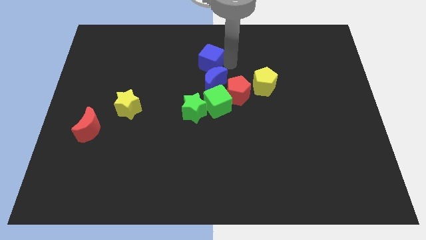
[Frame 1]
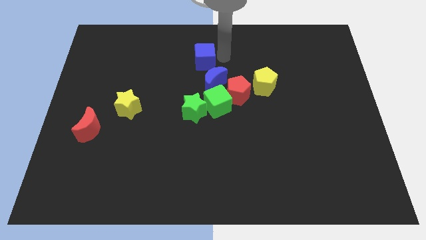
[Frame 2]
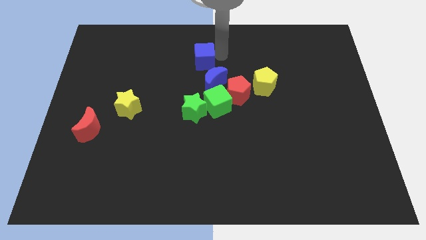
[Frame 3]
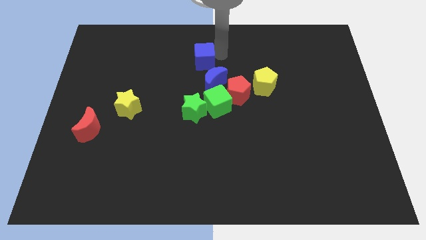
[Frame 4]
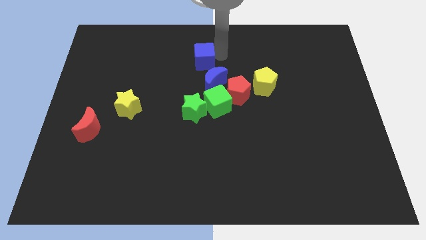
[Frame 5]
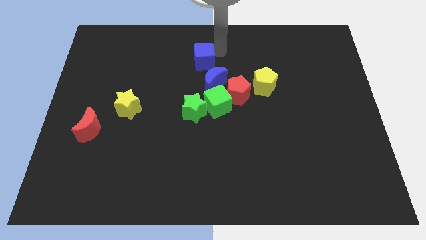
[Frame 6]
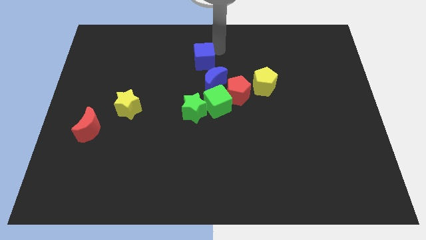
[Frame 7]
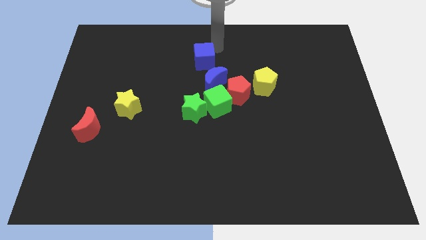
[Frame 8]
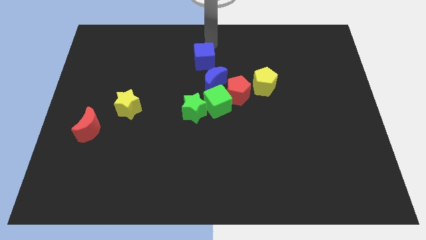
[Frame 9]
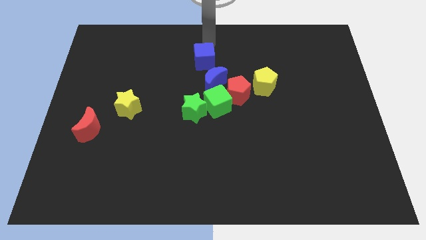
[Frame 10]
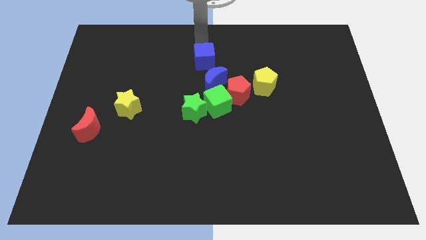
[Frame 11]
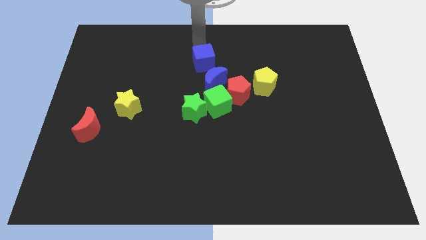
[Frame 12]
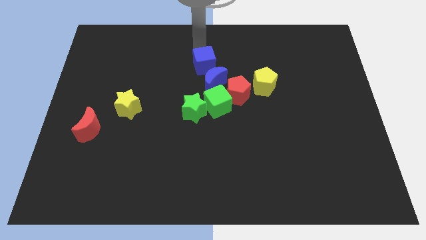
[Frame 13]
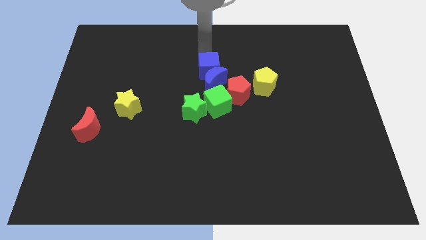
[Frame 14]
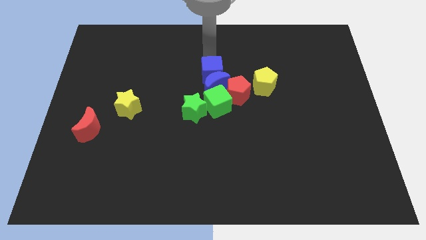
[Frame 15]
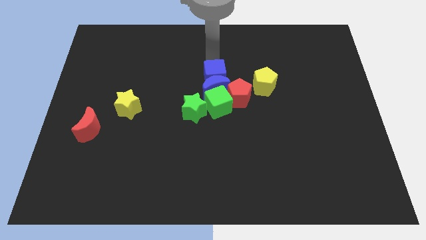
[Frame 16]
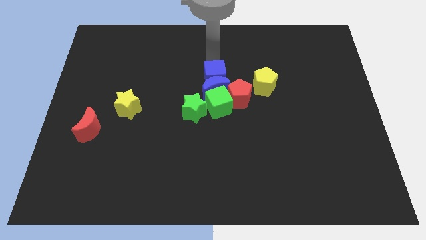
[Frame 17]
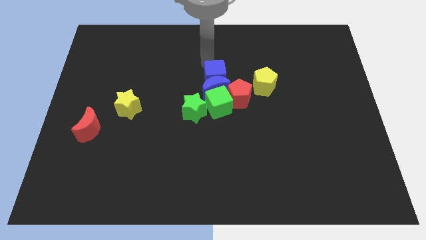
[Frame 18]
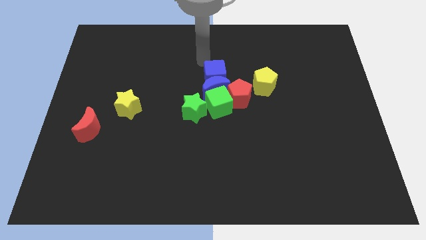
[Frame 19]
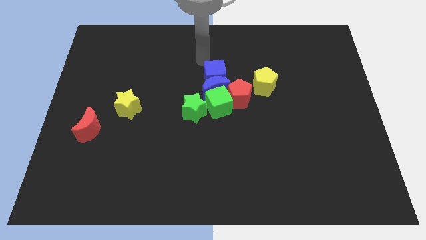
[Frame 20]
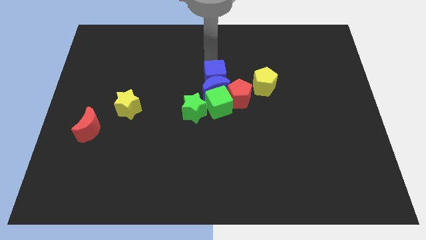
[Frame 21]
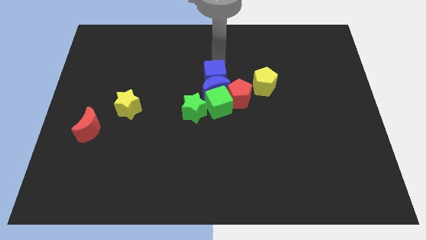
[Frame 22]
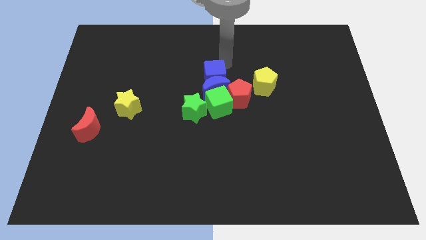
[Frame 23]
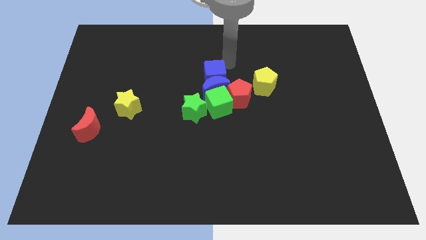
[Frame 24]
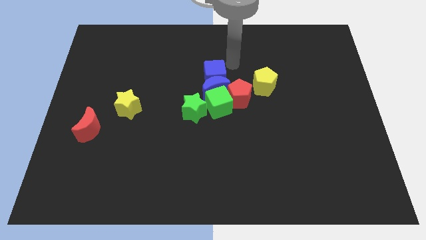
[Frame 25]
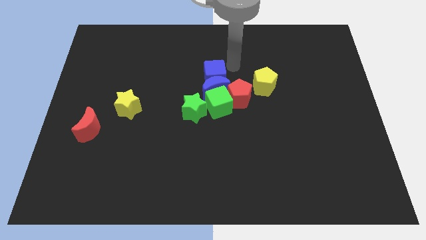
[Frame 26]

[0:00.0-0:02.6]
slightly move the blue cube towards the blue crescent

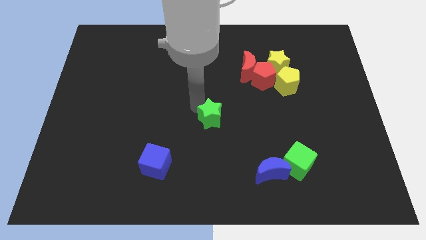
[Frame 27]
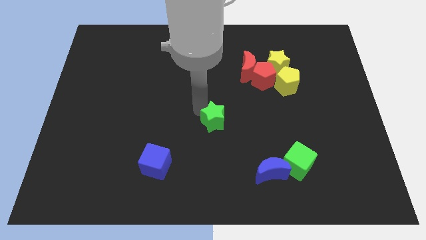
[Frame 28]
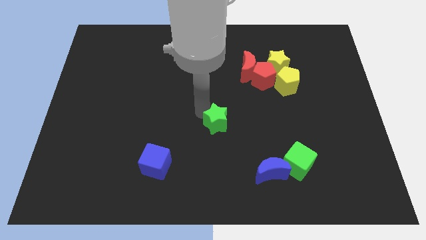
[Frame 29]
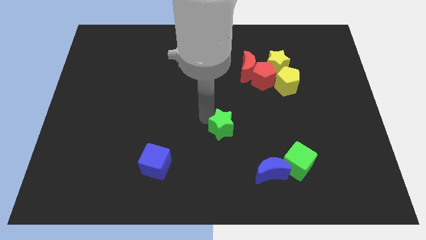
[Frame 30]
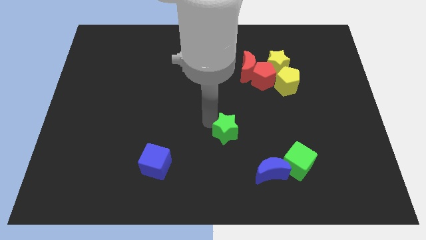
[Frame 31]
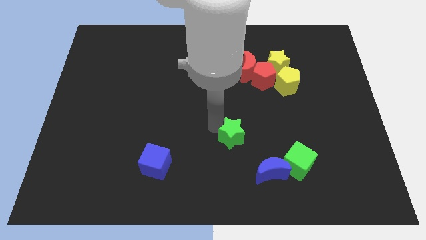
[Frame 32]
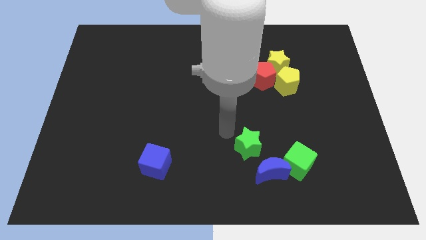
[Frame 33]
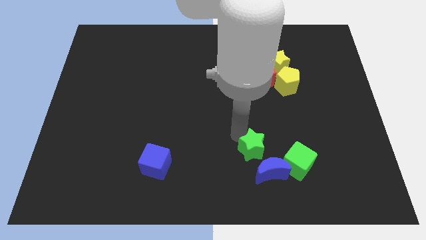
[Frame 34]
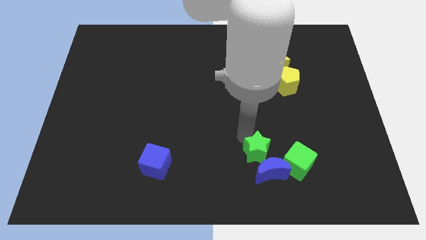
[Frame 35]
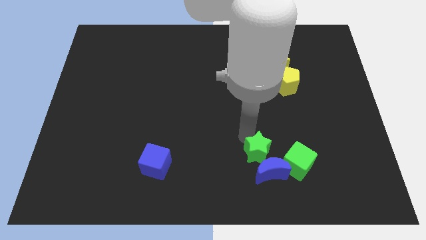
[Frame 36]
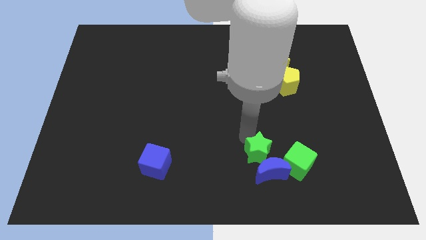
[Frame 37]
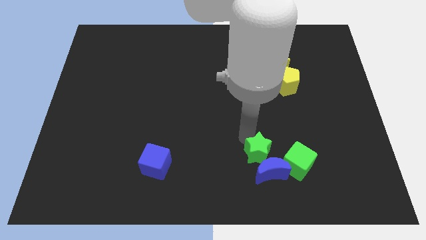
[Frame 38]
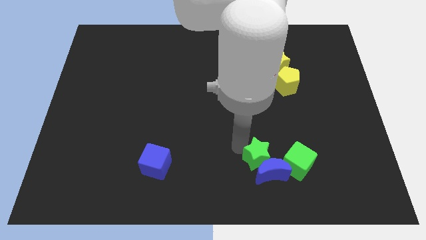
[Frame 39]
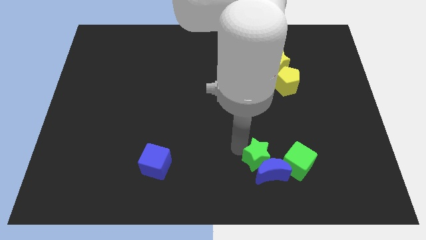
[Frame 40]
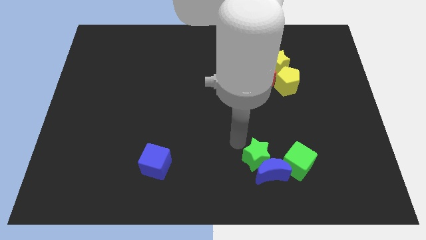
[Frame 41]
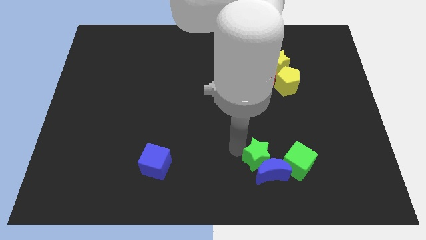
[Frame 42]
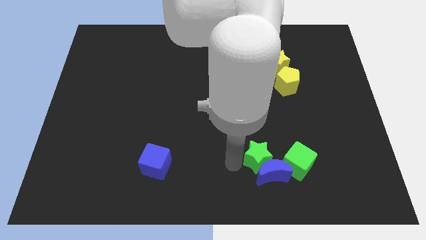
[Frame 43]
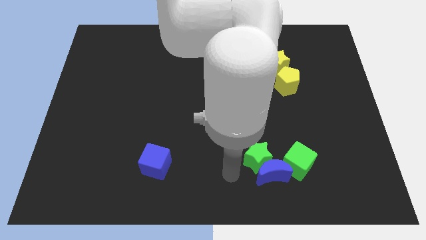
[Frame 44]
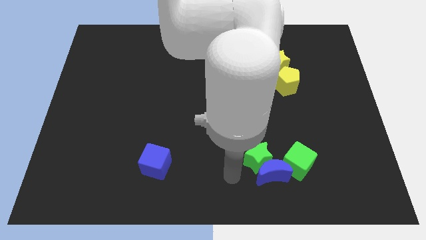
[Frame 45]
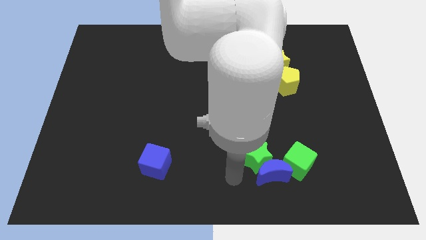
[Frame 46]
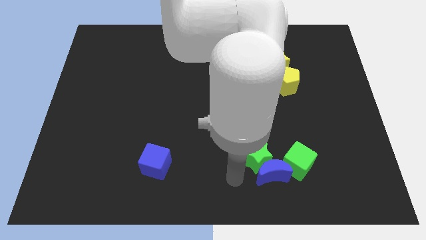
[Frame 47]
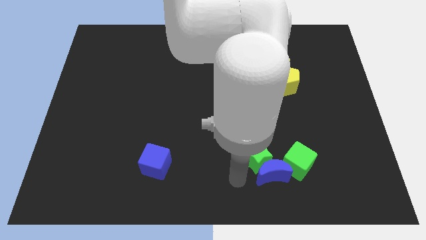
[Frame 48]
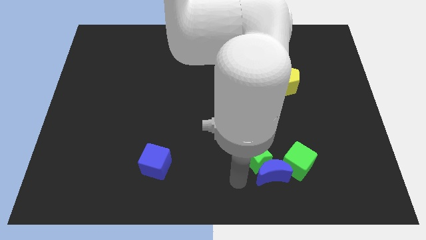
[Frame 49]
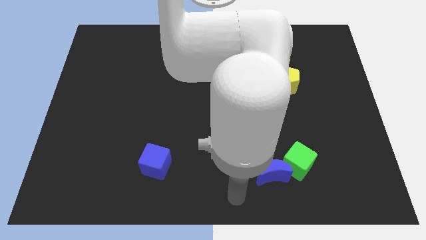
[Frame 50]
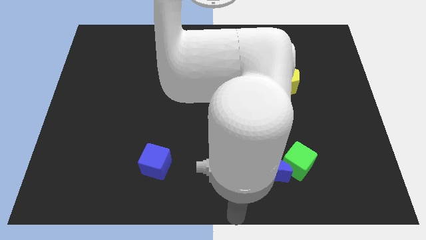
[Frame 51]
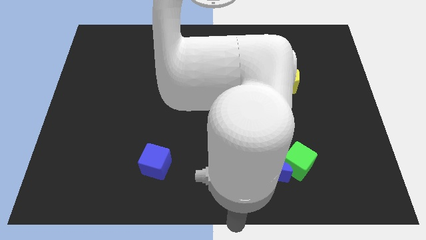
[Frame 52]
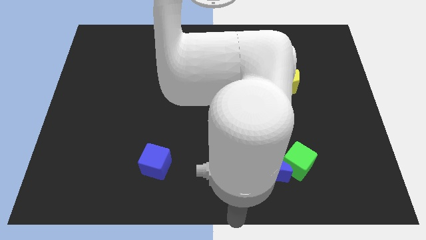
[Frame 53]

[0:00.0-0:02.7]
move the arm to the bottom middle of the board

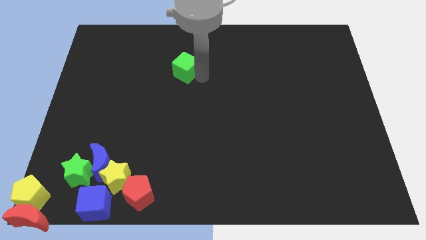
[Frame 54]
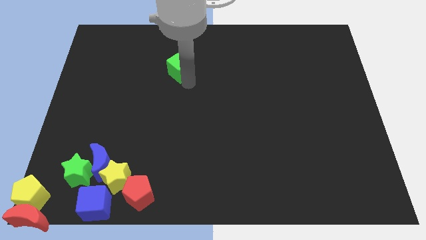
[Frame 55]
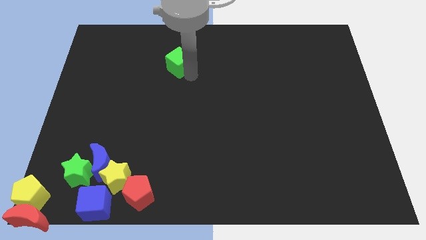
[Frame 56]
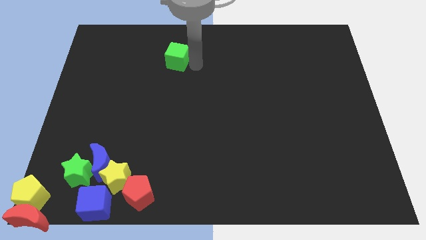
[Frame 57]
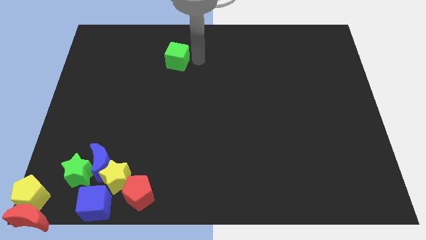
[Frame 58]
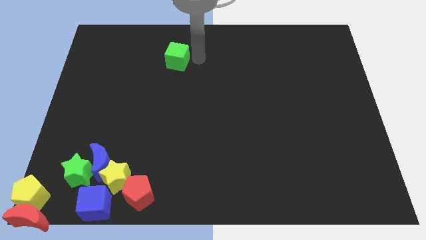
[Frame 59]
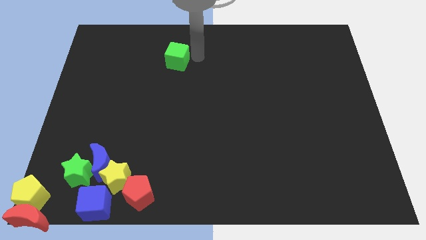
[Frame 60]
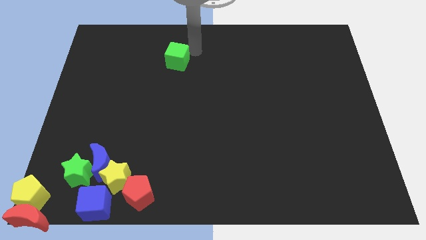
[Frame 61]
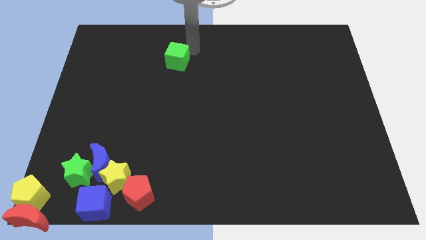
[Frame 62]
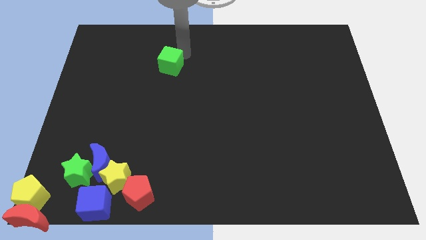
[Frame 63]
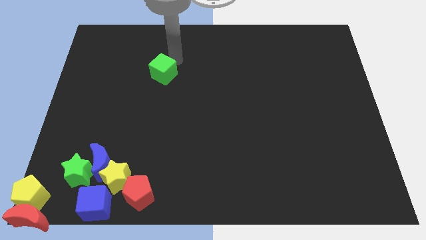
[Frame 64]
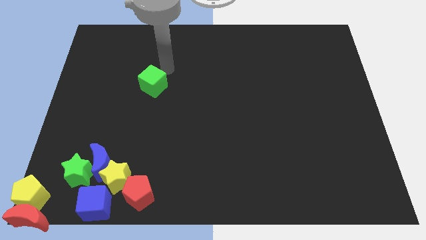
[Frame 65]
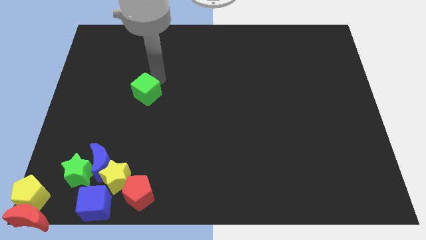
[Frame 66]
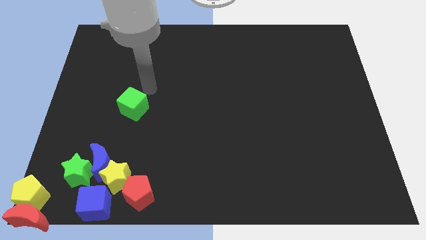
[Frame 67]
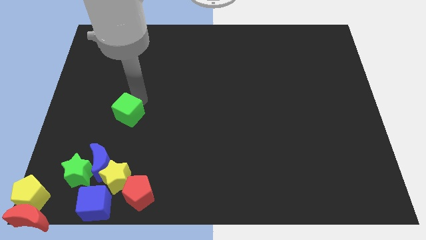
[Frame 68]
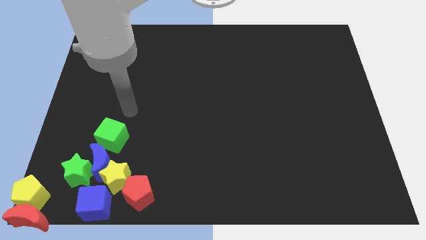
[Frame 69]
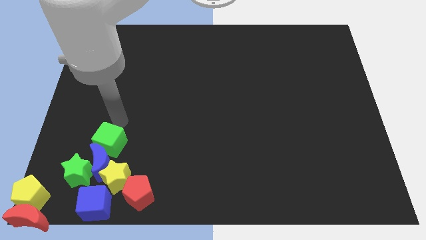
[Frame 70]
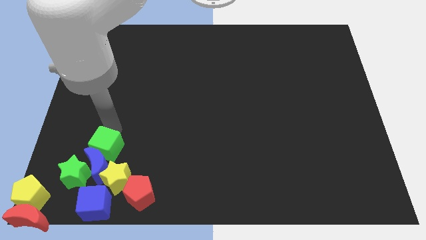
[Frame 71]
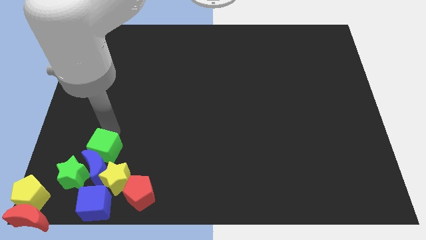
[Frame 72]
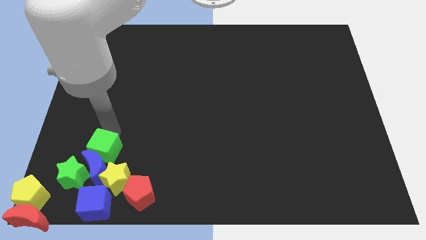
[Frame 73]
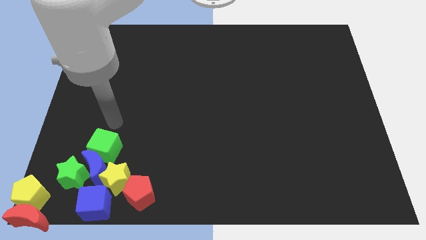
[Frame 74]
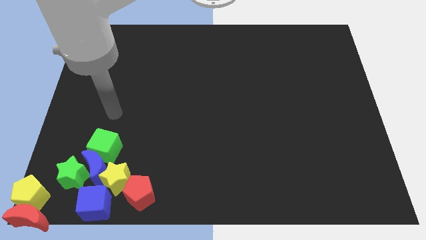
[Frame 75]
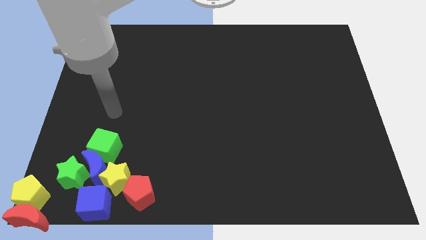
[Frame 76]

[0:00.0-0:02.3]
push the green cube to the top of the blue crescent

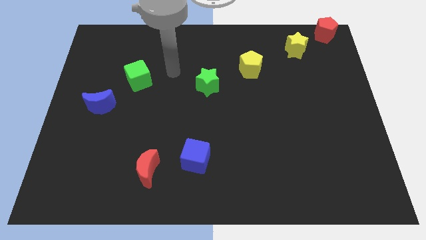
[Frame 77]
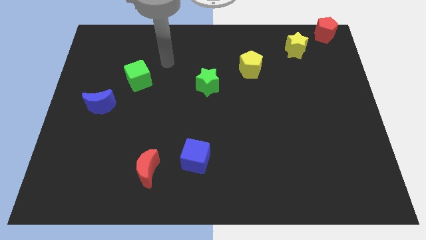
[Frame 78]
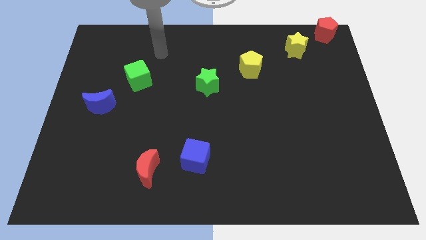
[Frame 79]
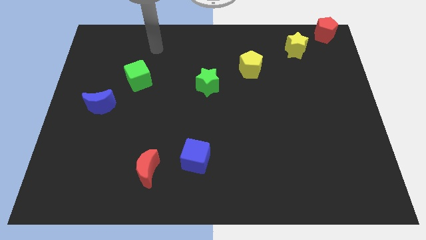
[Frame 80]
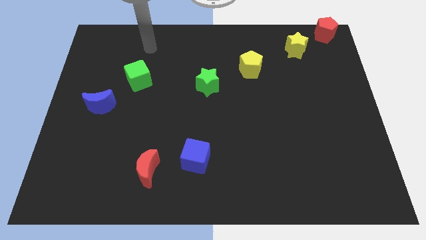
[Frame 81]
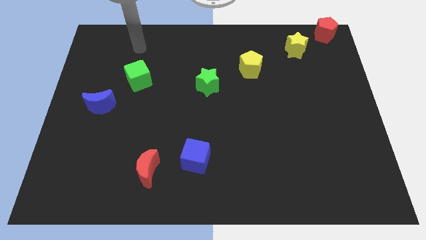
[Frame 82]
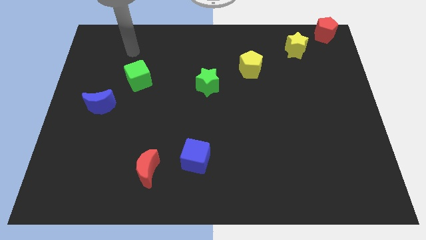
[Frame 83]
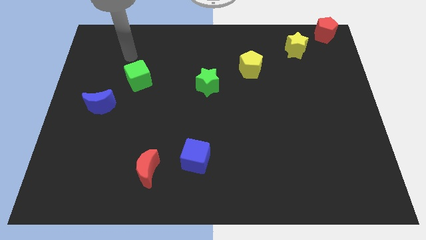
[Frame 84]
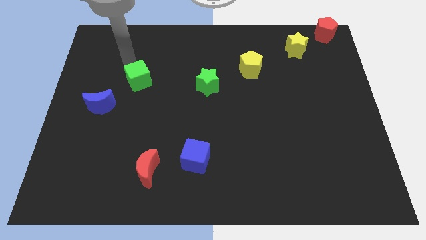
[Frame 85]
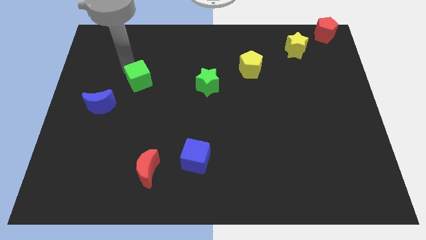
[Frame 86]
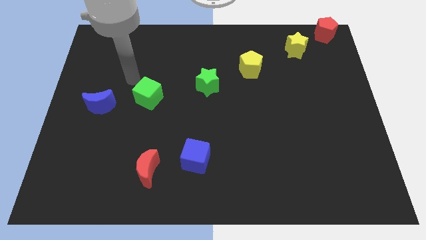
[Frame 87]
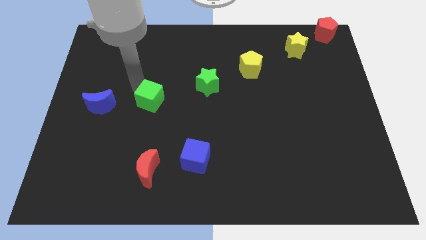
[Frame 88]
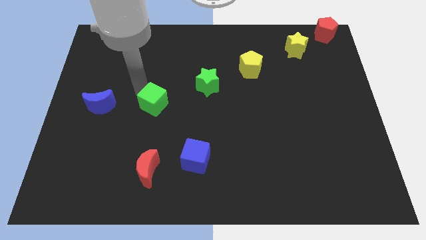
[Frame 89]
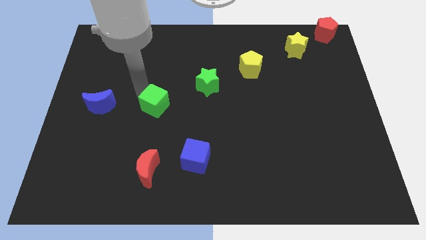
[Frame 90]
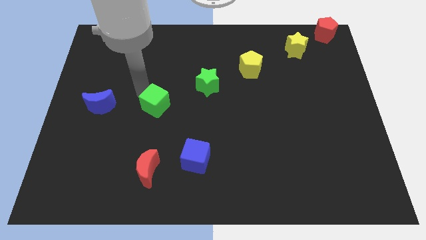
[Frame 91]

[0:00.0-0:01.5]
move the green cube towards blue cube
